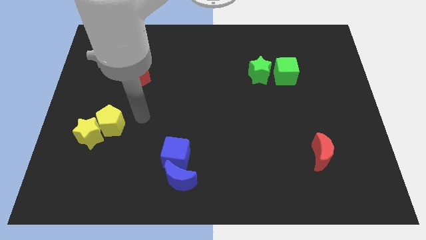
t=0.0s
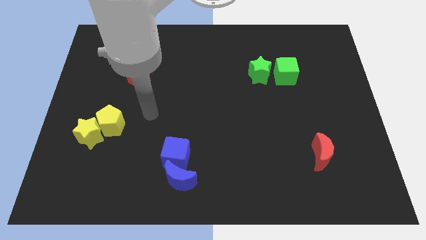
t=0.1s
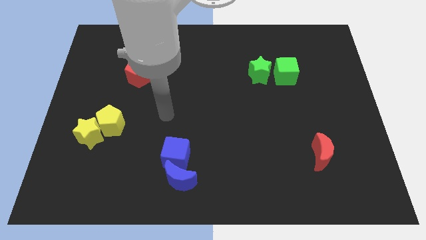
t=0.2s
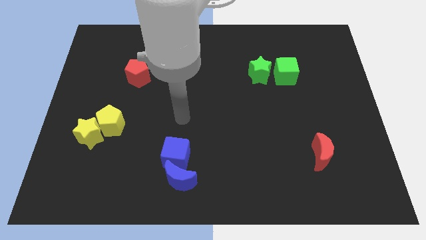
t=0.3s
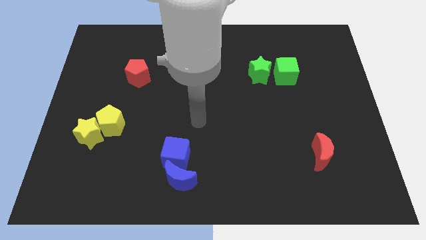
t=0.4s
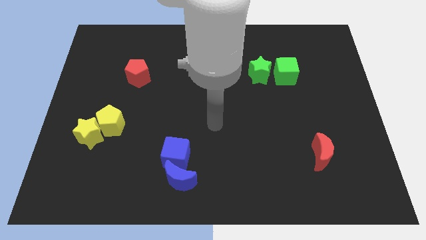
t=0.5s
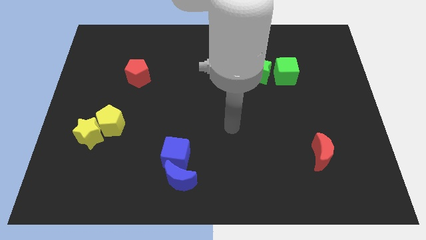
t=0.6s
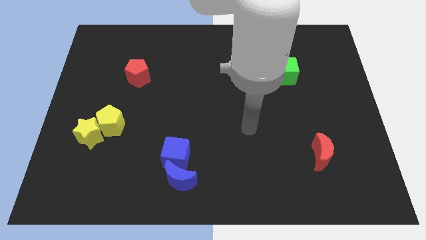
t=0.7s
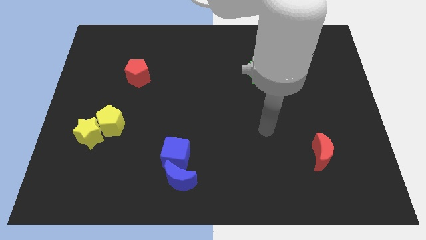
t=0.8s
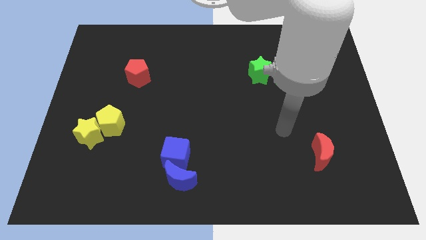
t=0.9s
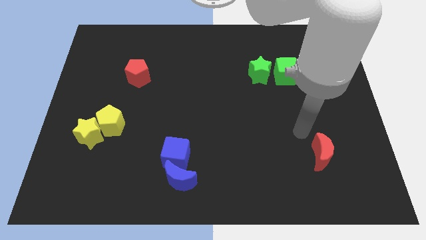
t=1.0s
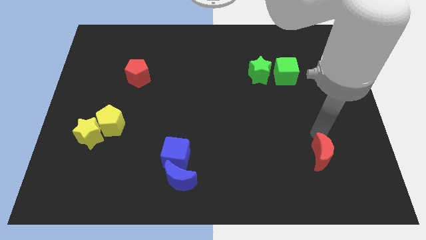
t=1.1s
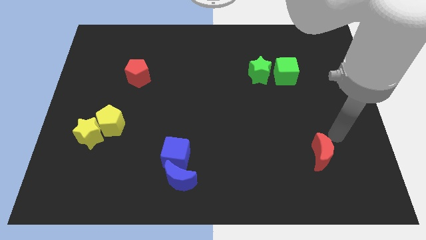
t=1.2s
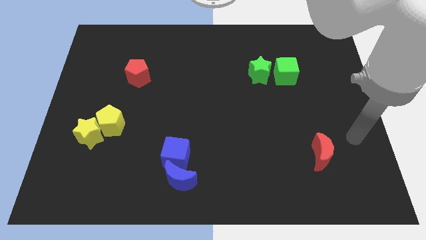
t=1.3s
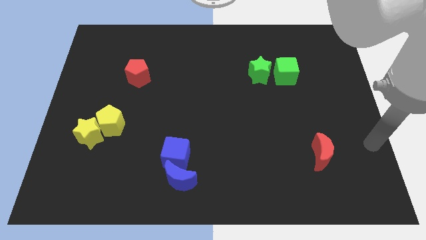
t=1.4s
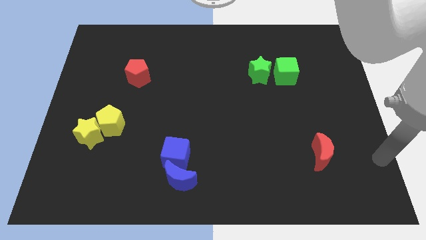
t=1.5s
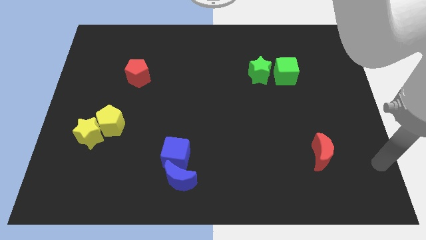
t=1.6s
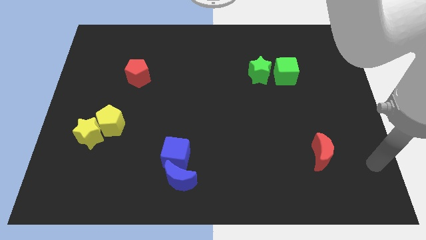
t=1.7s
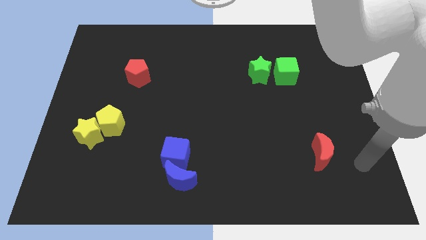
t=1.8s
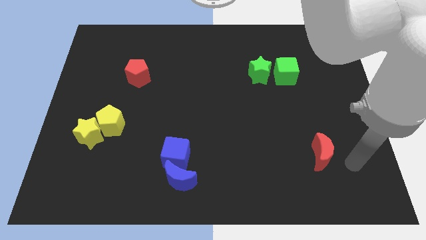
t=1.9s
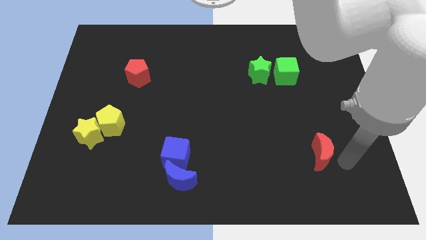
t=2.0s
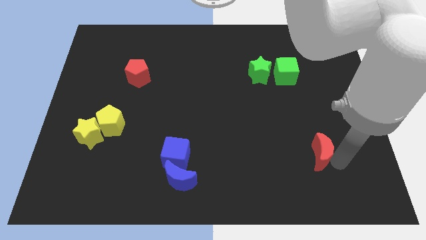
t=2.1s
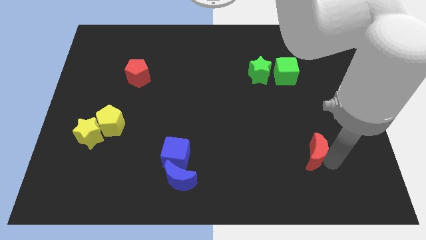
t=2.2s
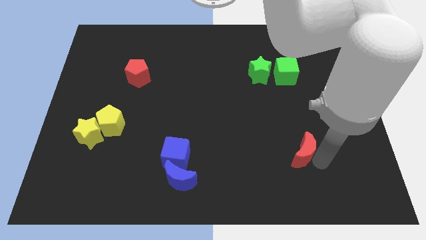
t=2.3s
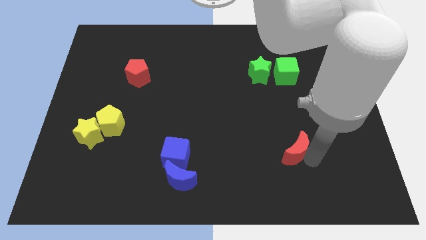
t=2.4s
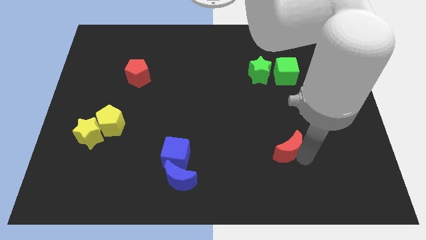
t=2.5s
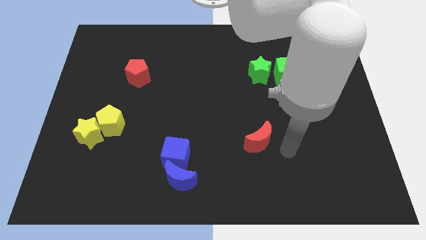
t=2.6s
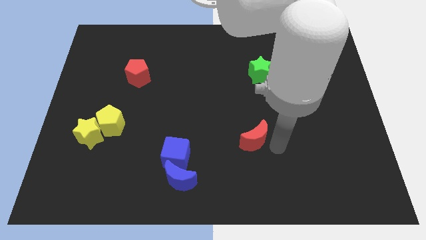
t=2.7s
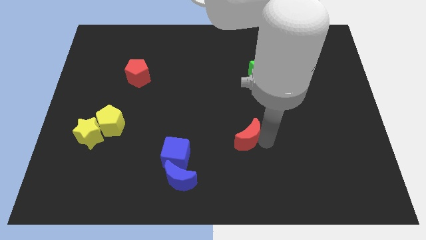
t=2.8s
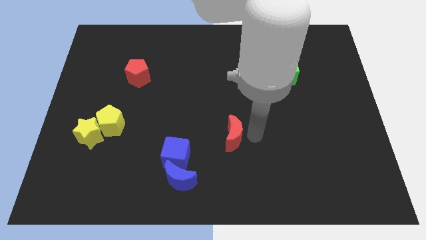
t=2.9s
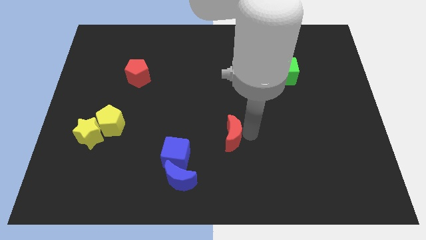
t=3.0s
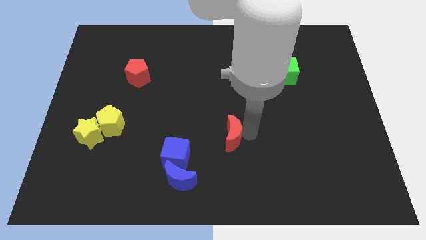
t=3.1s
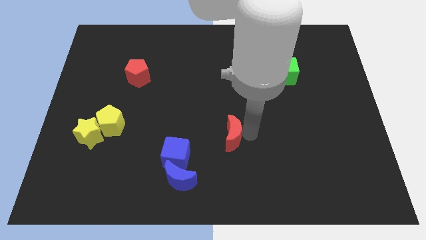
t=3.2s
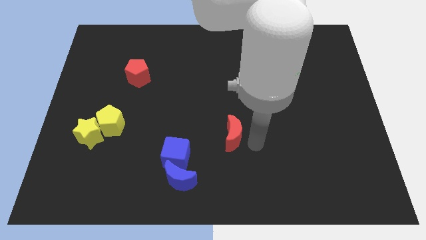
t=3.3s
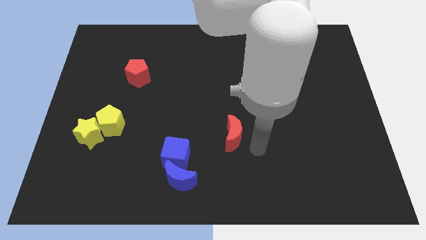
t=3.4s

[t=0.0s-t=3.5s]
move the red moon towards the center of the board

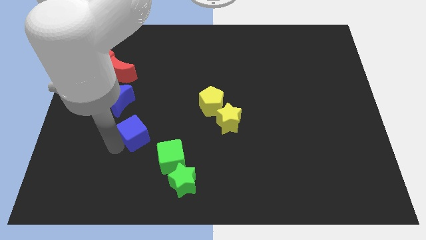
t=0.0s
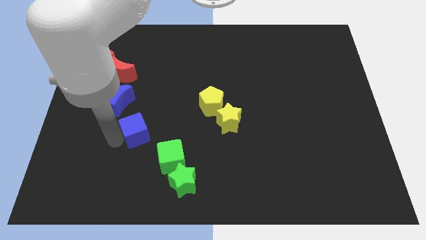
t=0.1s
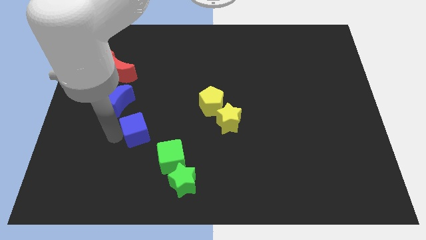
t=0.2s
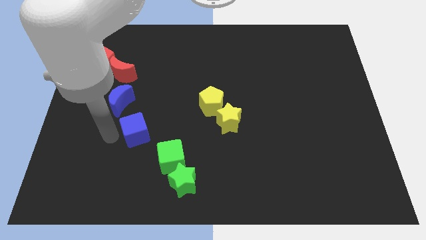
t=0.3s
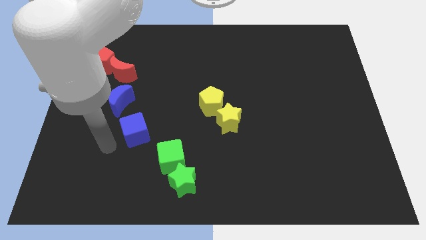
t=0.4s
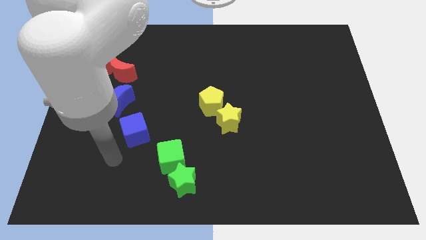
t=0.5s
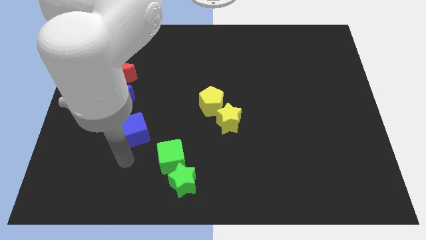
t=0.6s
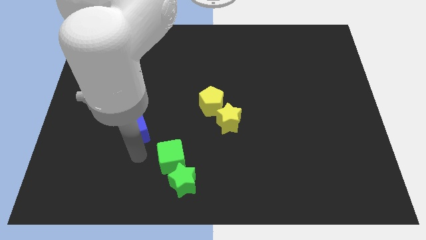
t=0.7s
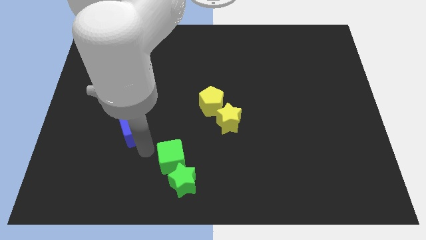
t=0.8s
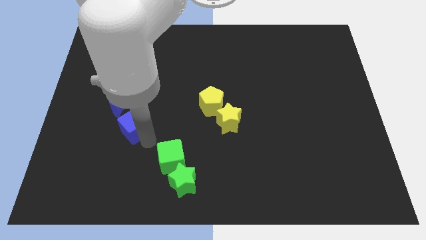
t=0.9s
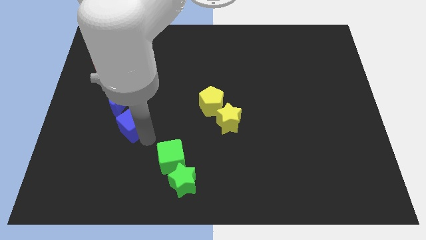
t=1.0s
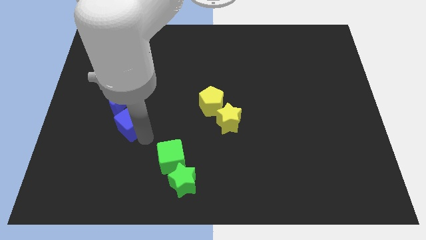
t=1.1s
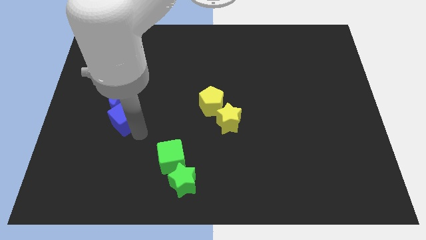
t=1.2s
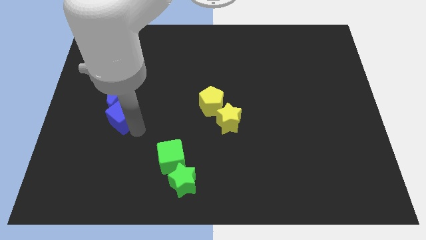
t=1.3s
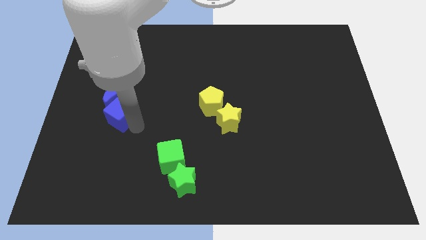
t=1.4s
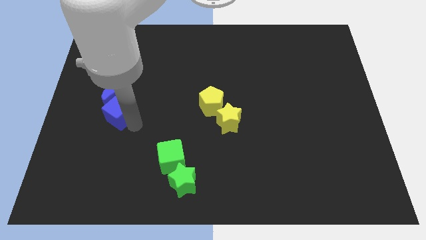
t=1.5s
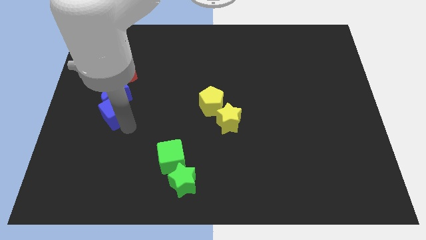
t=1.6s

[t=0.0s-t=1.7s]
push the blue cube into the blue moon

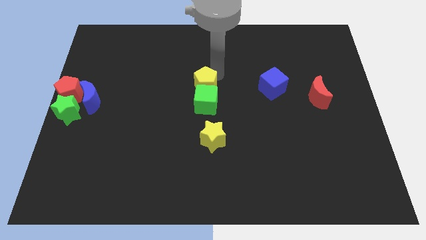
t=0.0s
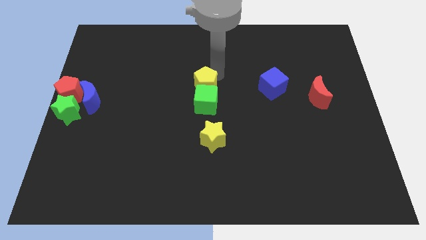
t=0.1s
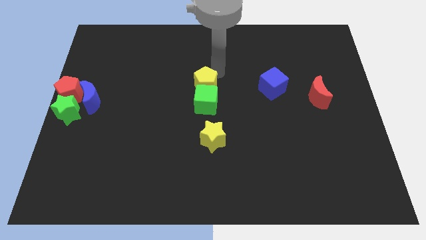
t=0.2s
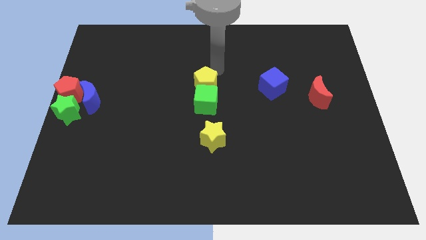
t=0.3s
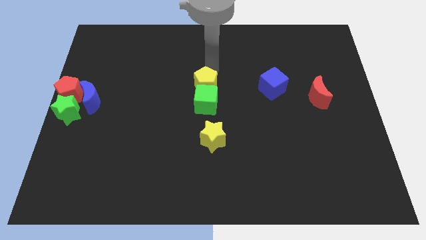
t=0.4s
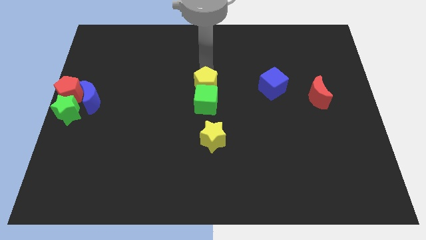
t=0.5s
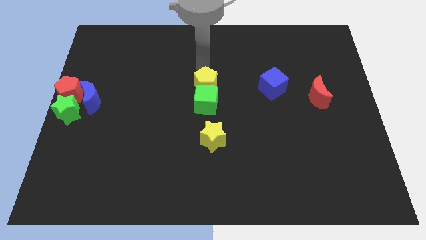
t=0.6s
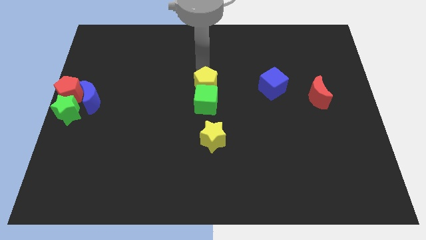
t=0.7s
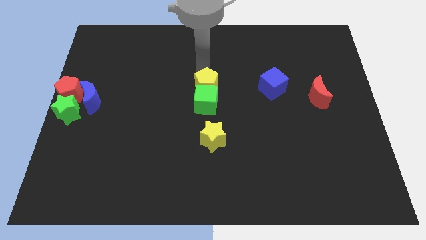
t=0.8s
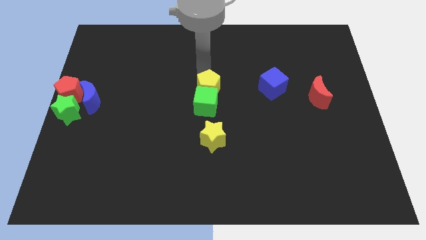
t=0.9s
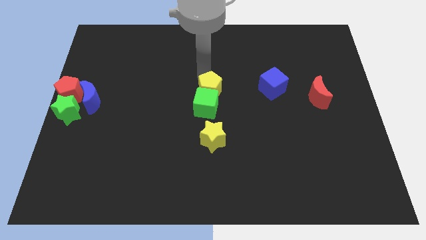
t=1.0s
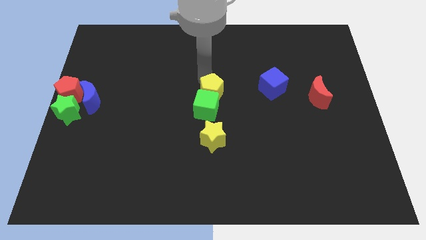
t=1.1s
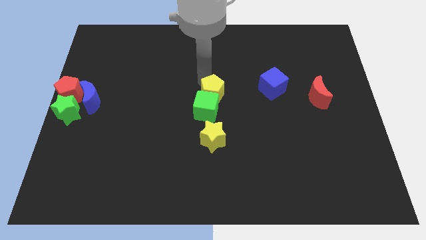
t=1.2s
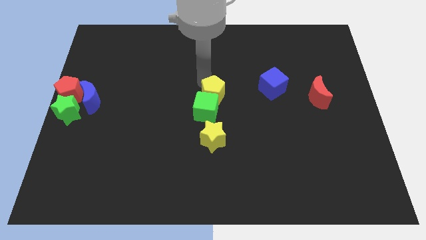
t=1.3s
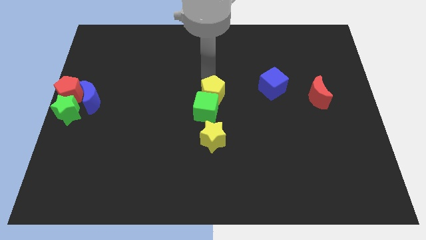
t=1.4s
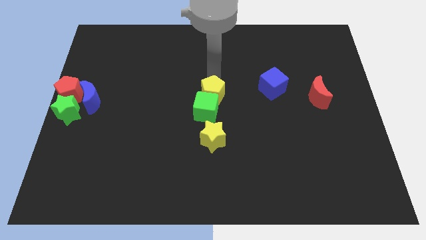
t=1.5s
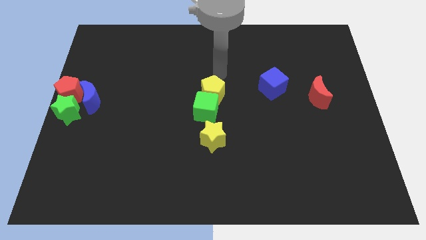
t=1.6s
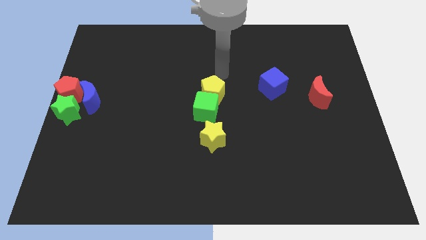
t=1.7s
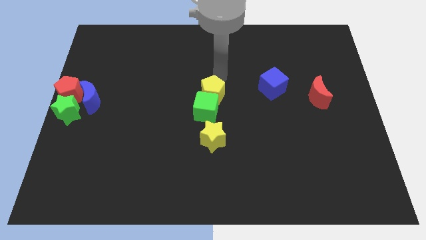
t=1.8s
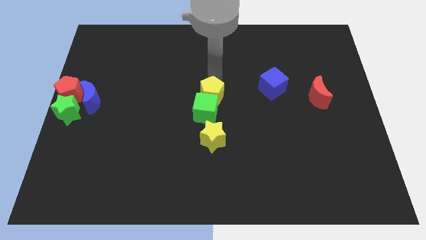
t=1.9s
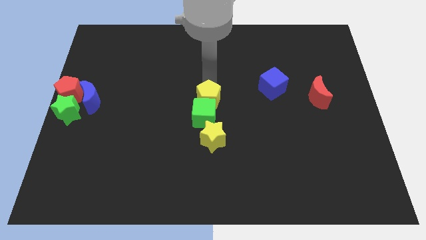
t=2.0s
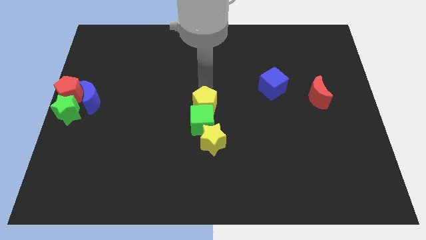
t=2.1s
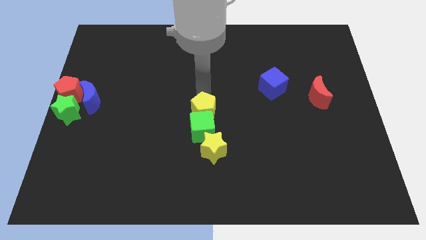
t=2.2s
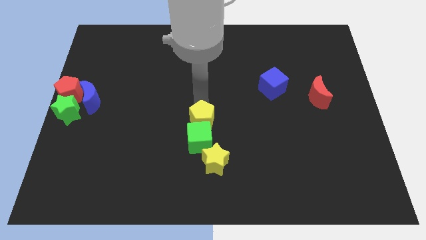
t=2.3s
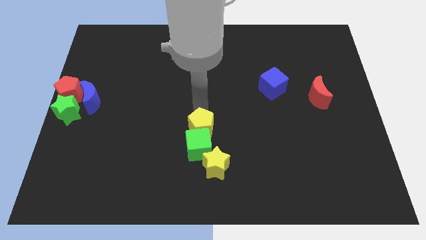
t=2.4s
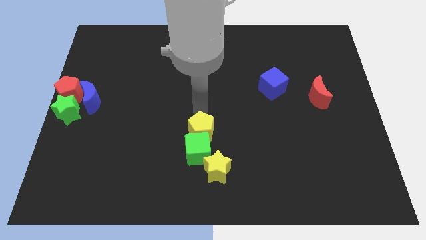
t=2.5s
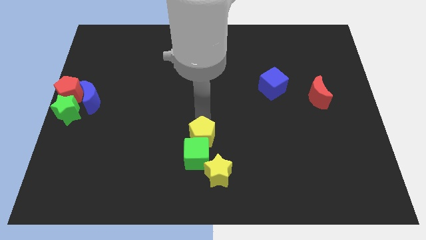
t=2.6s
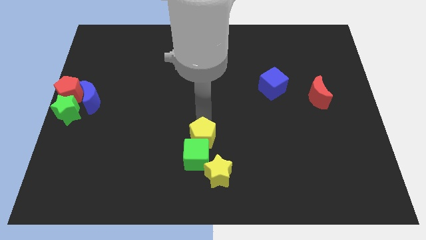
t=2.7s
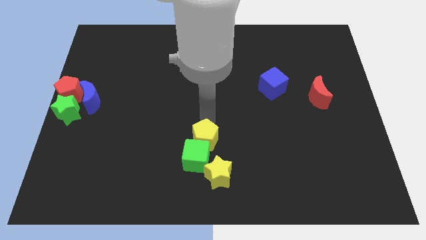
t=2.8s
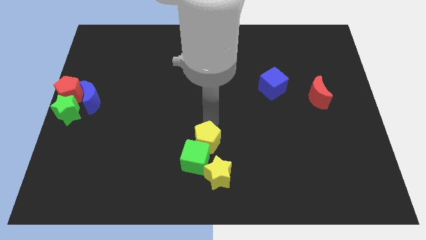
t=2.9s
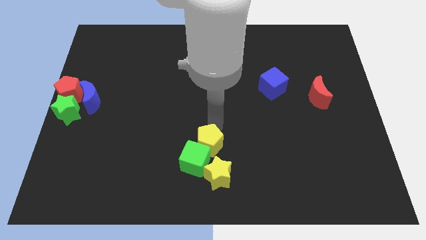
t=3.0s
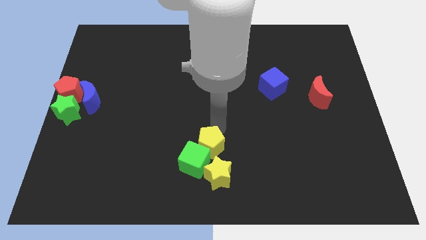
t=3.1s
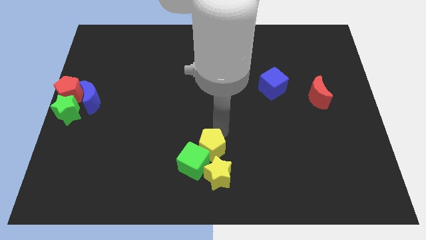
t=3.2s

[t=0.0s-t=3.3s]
move the group of both yellow blocks and green cube towards the bottom center of the board

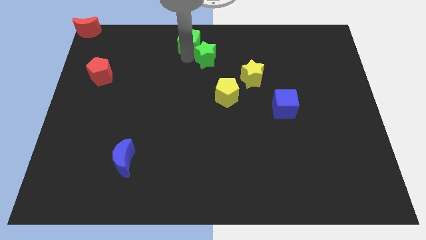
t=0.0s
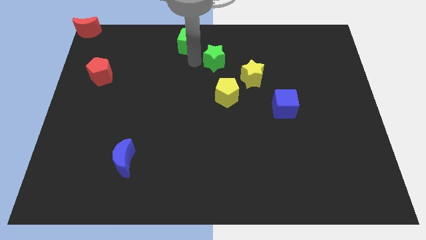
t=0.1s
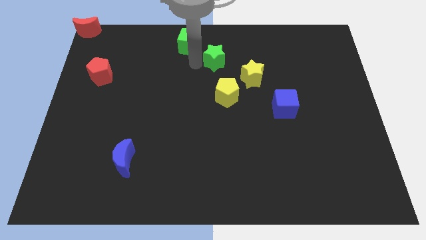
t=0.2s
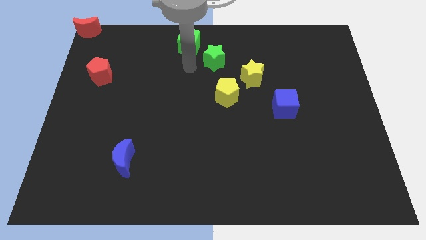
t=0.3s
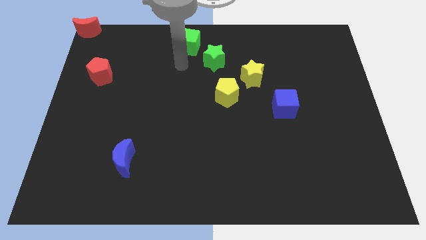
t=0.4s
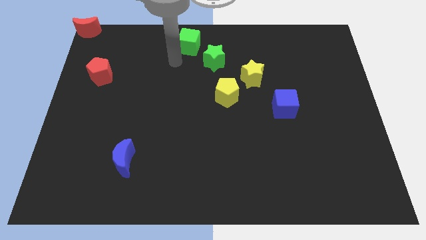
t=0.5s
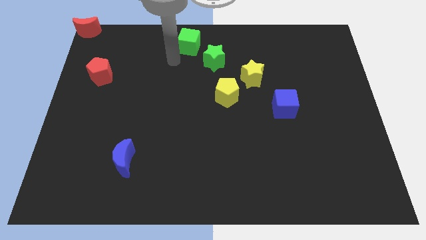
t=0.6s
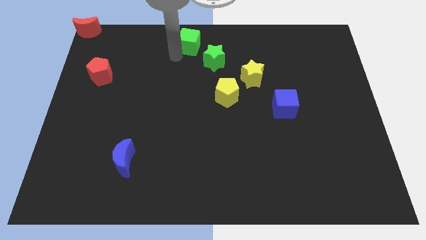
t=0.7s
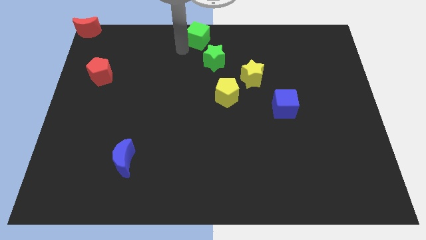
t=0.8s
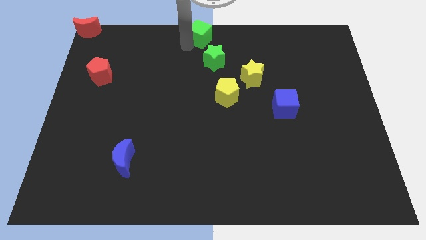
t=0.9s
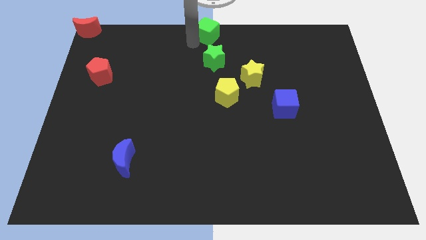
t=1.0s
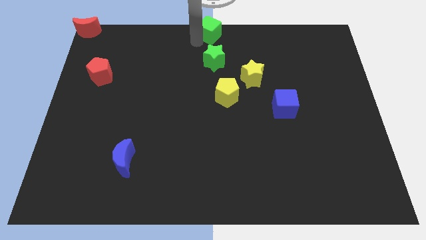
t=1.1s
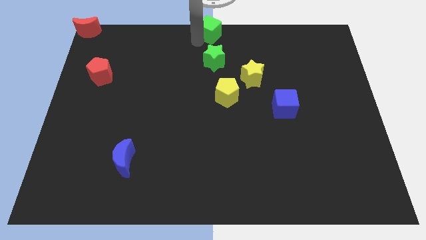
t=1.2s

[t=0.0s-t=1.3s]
place the green cube above the green star
